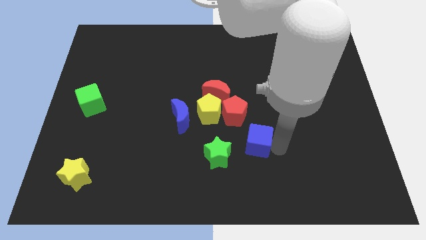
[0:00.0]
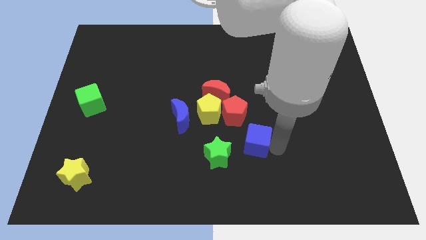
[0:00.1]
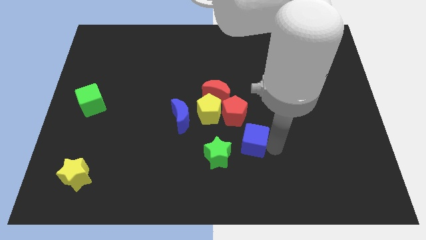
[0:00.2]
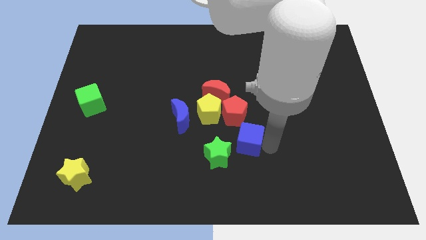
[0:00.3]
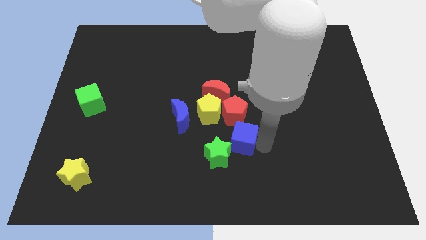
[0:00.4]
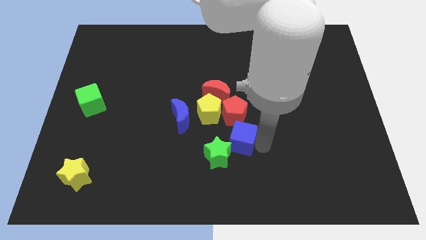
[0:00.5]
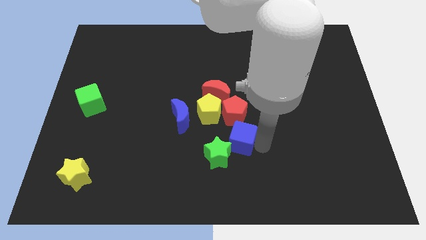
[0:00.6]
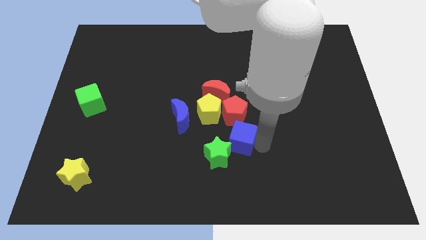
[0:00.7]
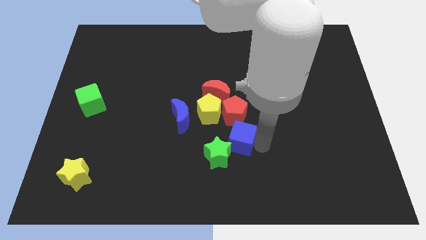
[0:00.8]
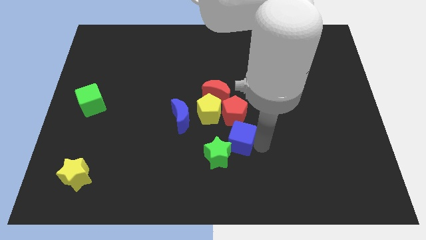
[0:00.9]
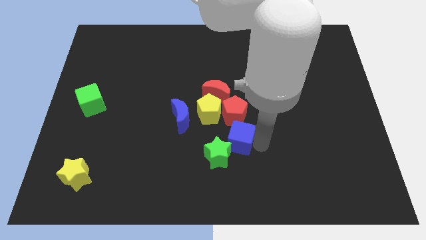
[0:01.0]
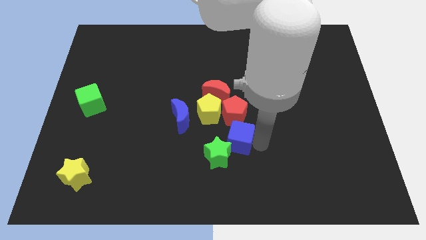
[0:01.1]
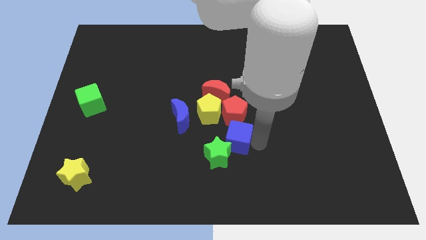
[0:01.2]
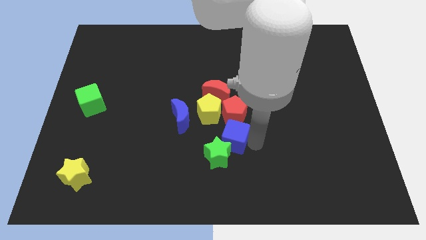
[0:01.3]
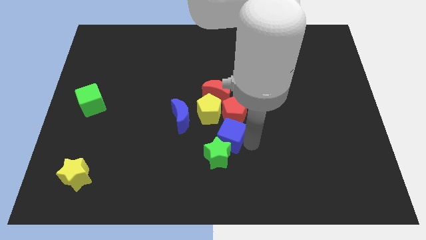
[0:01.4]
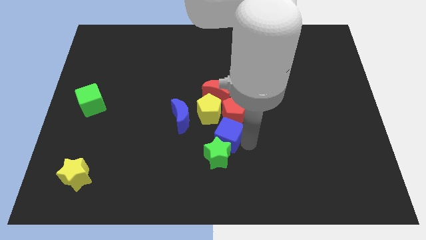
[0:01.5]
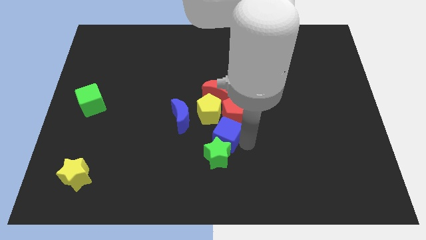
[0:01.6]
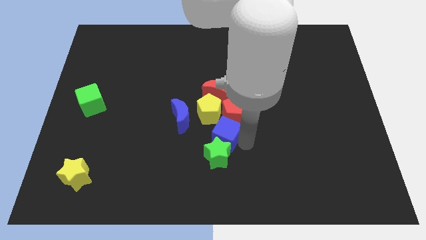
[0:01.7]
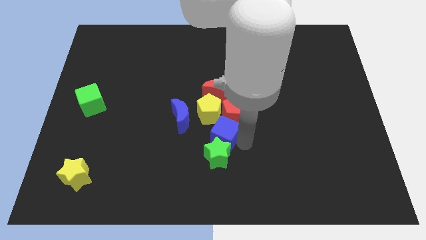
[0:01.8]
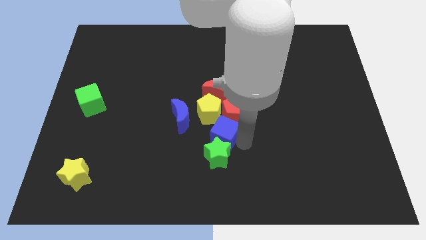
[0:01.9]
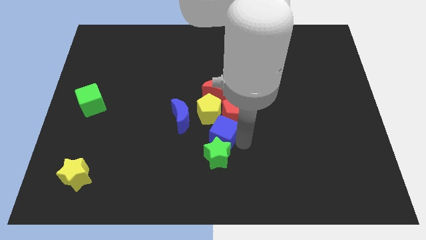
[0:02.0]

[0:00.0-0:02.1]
move the blue cube to the top of the green star

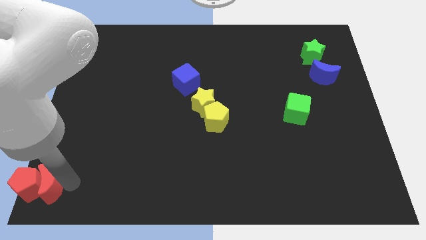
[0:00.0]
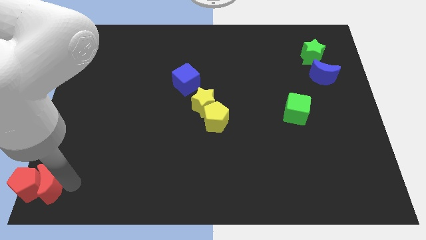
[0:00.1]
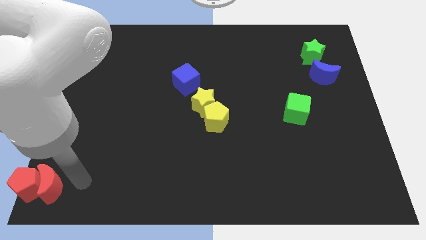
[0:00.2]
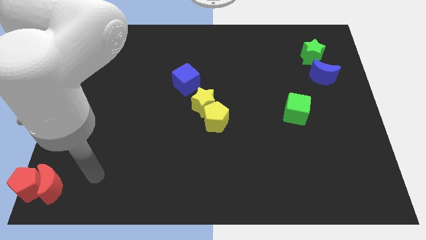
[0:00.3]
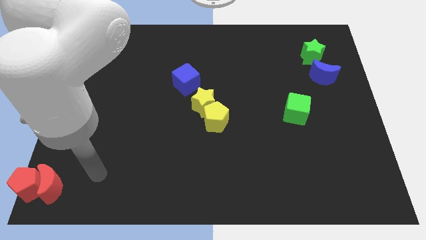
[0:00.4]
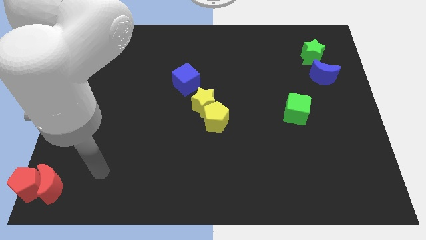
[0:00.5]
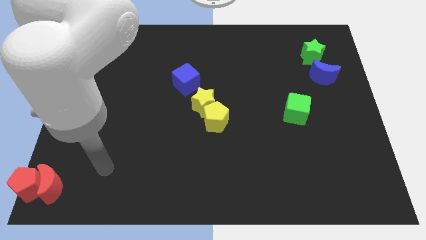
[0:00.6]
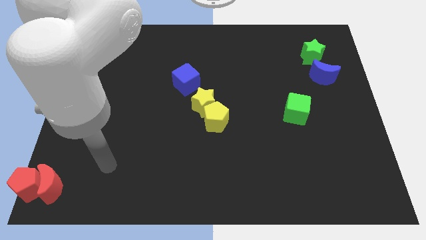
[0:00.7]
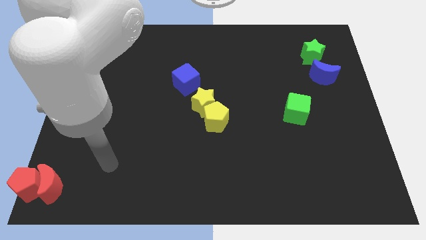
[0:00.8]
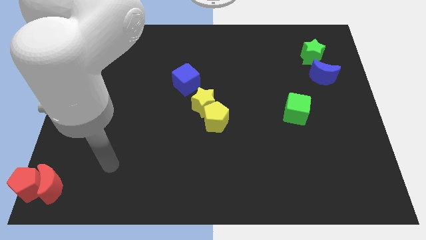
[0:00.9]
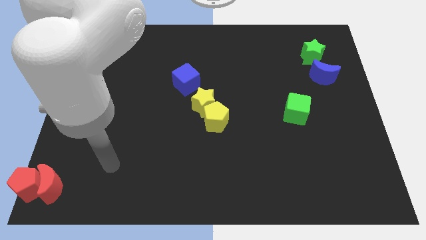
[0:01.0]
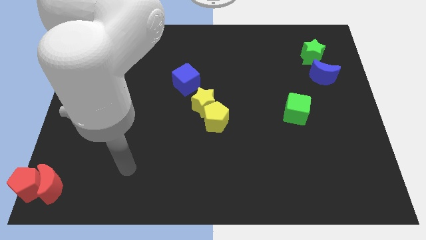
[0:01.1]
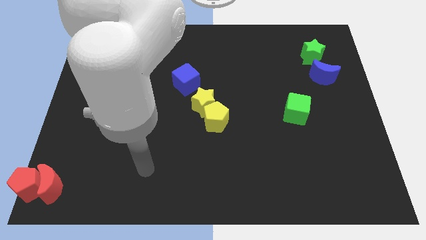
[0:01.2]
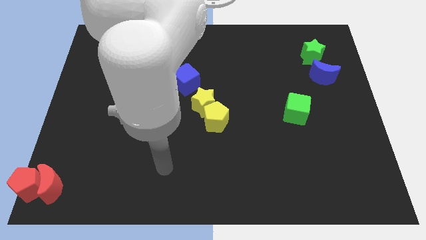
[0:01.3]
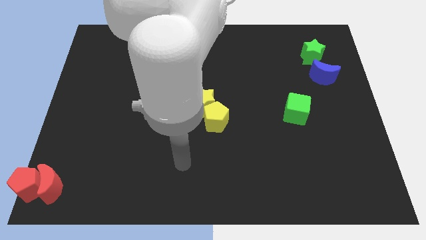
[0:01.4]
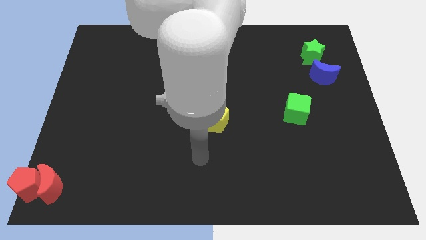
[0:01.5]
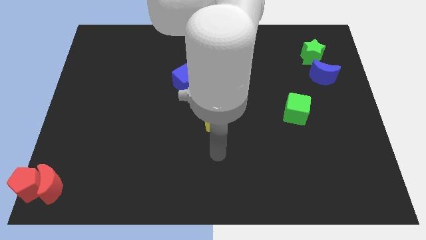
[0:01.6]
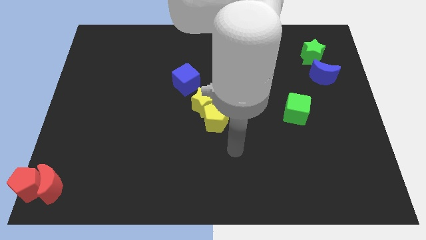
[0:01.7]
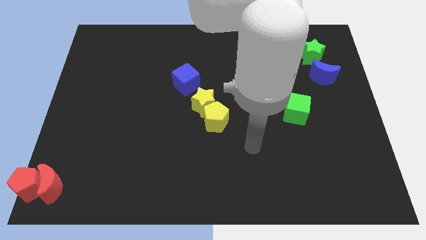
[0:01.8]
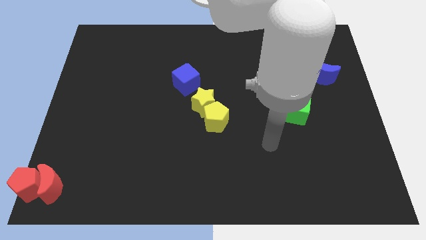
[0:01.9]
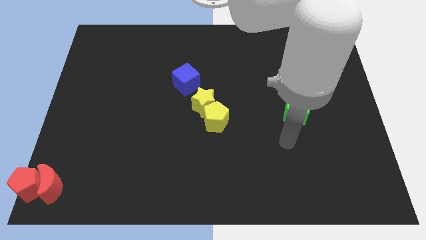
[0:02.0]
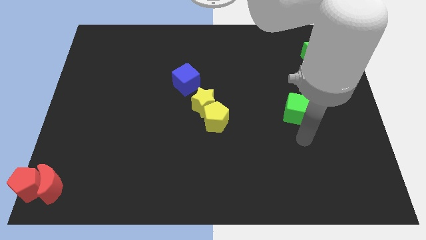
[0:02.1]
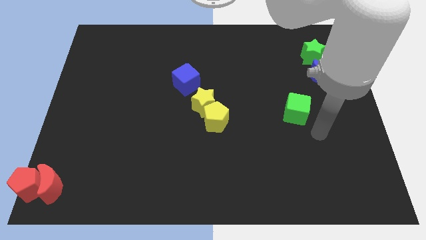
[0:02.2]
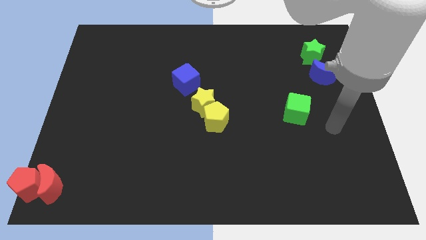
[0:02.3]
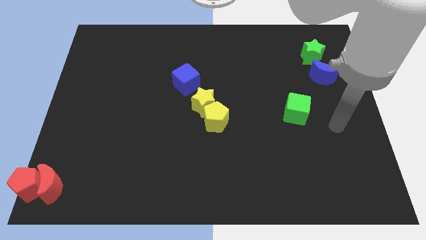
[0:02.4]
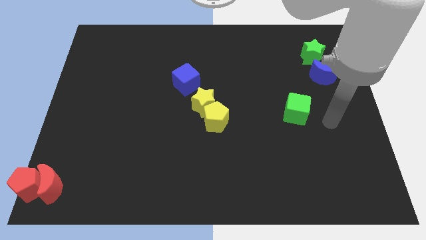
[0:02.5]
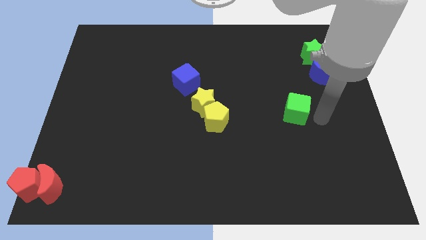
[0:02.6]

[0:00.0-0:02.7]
move your arm away from the red moon

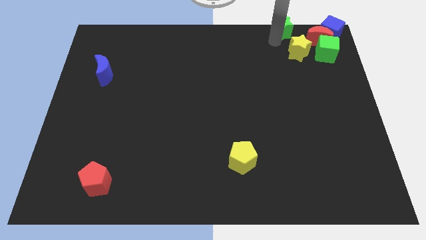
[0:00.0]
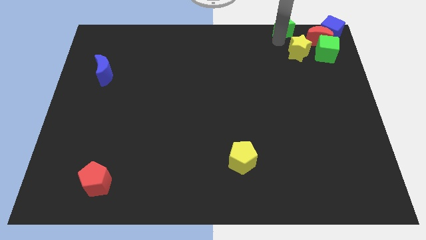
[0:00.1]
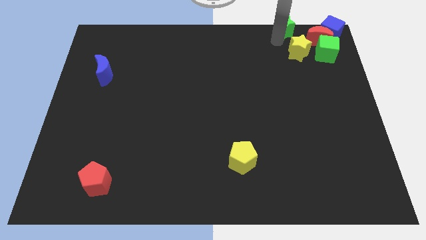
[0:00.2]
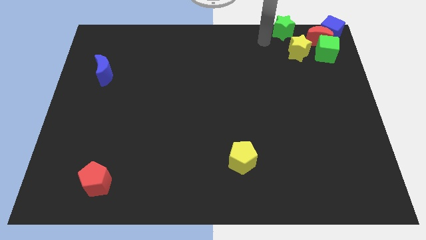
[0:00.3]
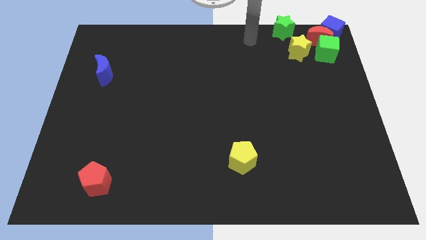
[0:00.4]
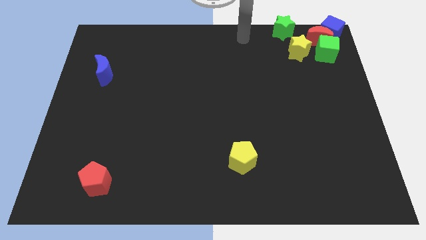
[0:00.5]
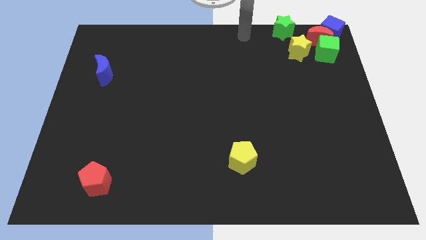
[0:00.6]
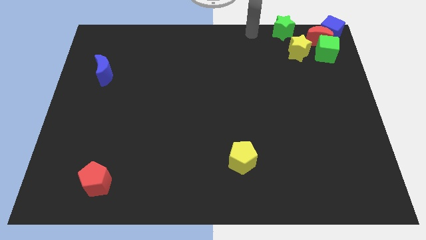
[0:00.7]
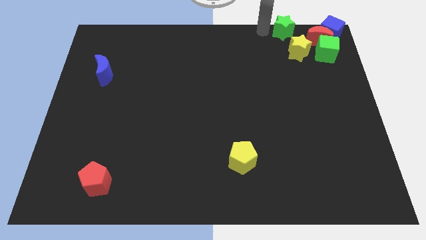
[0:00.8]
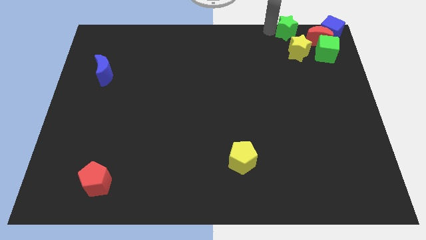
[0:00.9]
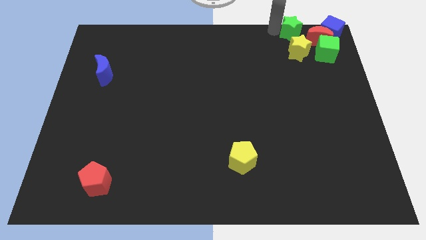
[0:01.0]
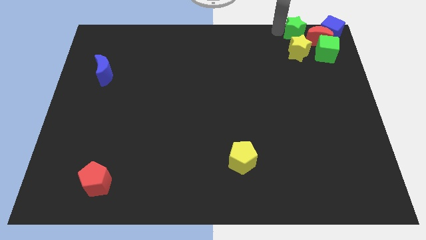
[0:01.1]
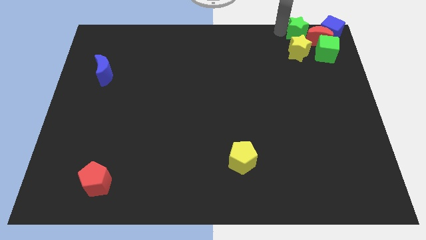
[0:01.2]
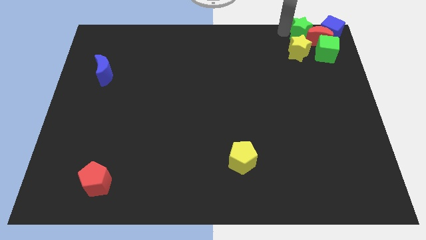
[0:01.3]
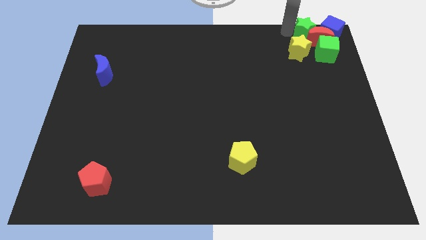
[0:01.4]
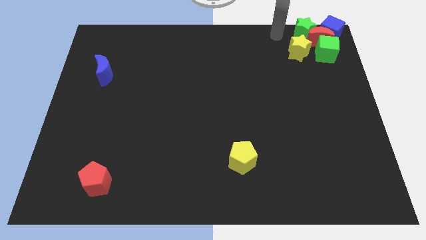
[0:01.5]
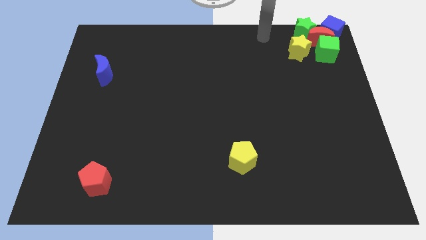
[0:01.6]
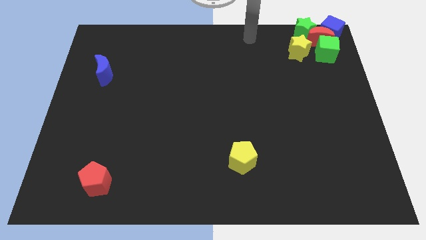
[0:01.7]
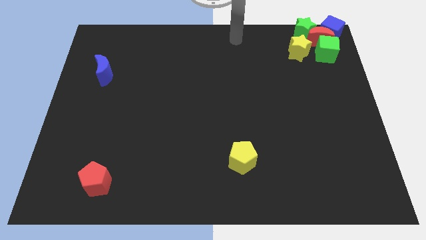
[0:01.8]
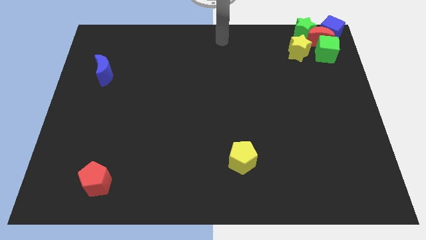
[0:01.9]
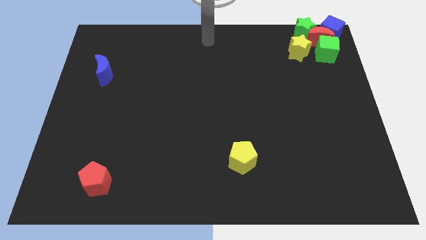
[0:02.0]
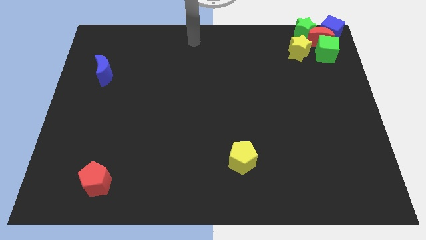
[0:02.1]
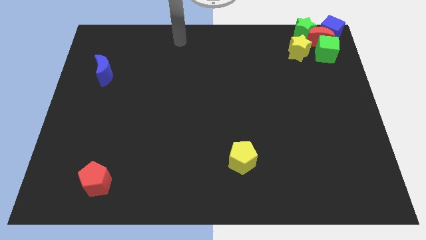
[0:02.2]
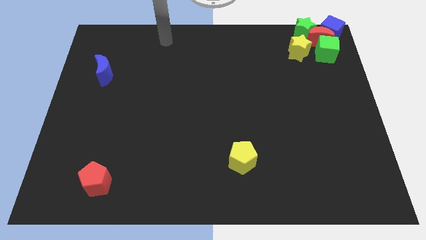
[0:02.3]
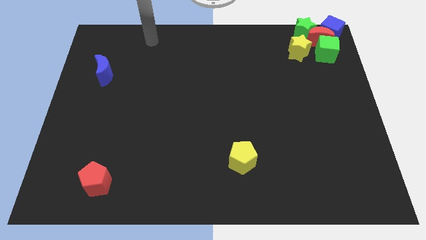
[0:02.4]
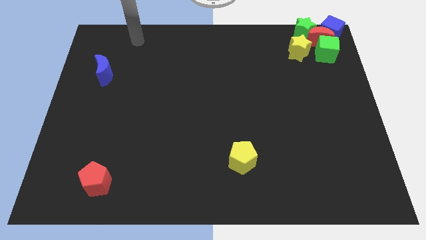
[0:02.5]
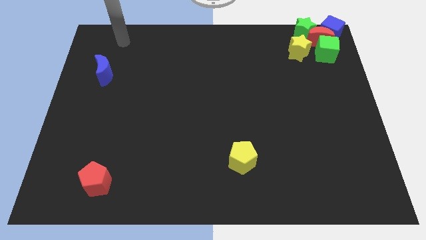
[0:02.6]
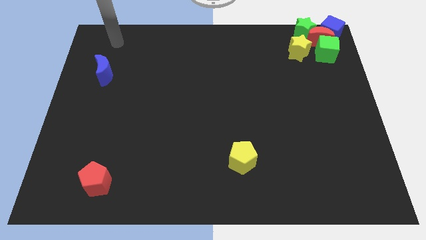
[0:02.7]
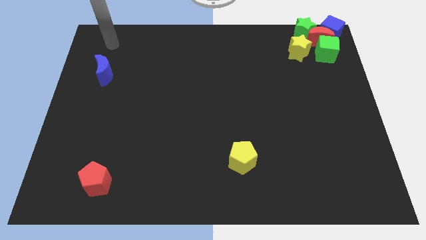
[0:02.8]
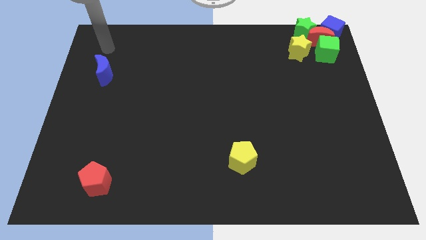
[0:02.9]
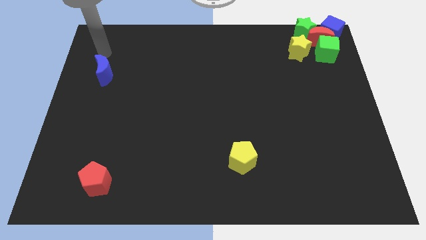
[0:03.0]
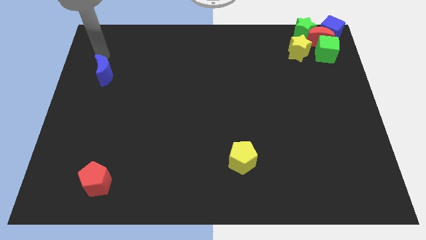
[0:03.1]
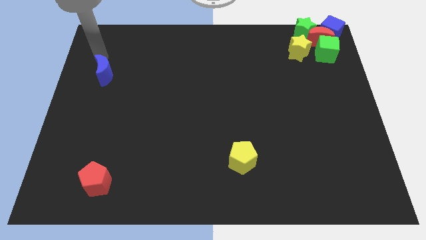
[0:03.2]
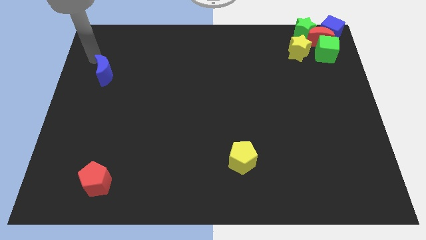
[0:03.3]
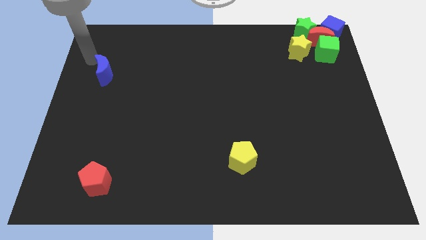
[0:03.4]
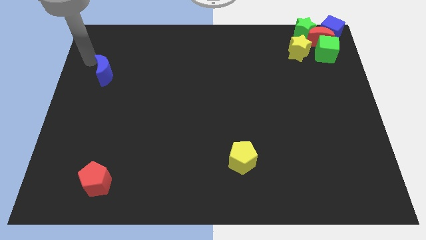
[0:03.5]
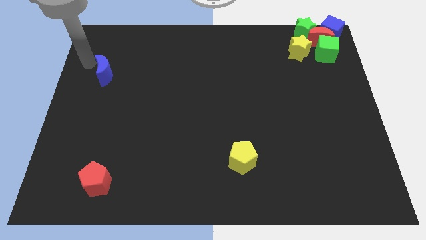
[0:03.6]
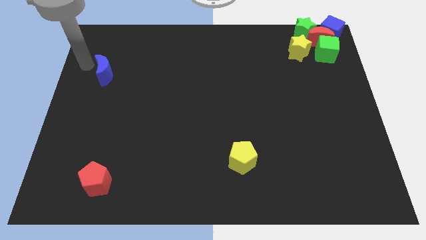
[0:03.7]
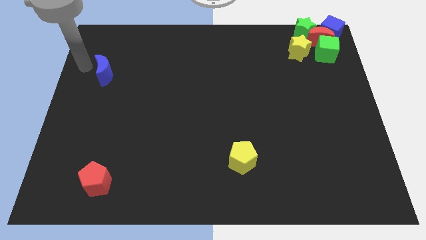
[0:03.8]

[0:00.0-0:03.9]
move your arm away from the green star

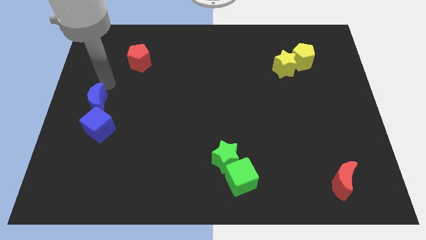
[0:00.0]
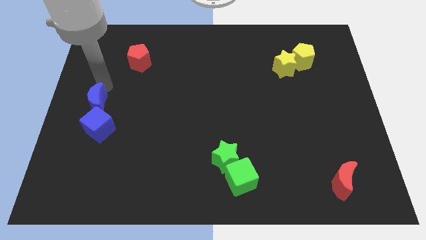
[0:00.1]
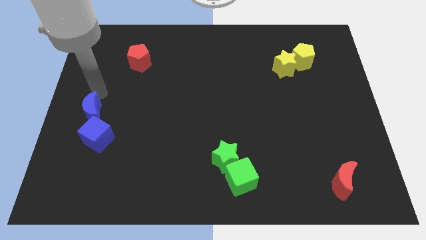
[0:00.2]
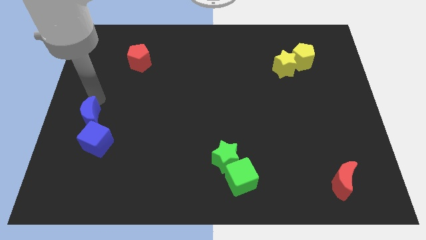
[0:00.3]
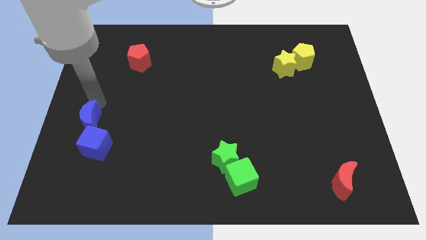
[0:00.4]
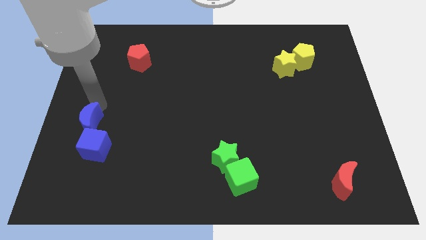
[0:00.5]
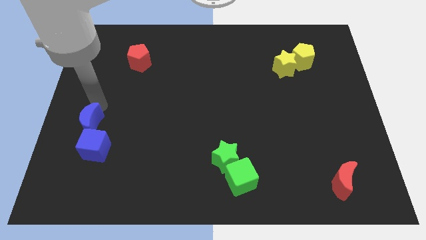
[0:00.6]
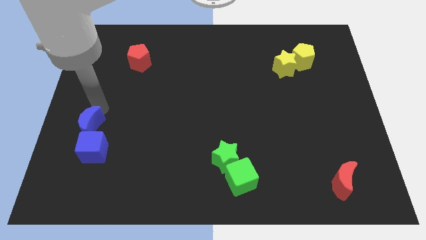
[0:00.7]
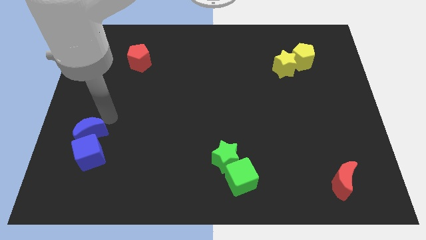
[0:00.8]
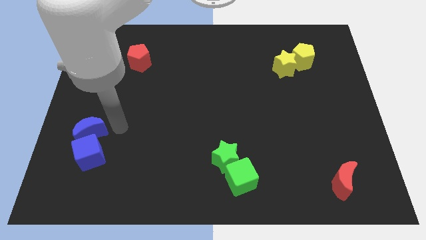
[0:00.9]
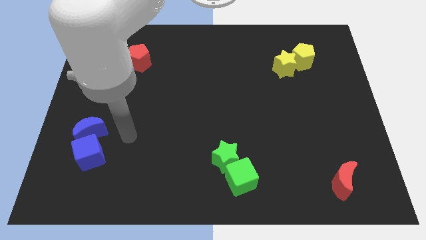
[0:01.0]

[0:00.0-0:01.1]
push blue blocks slightly down
